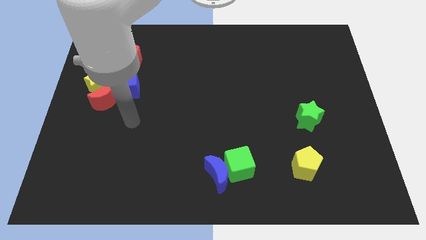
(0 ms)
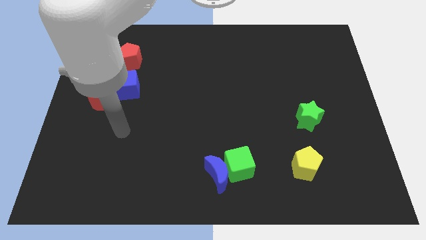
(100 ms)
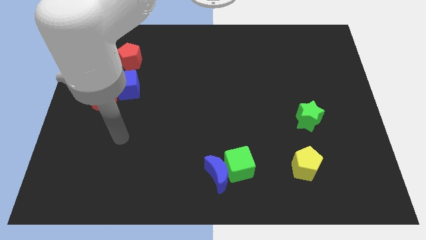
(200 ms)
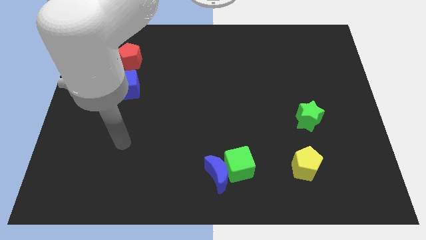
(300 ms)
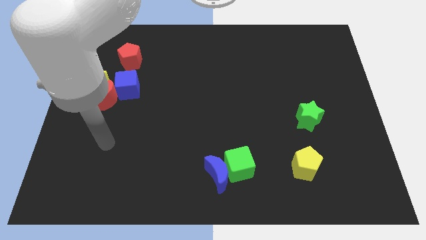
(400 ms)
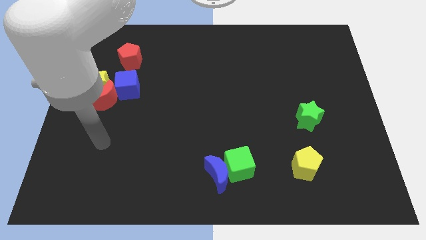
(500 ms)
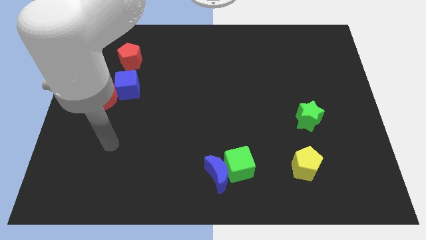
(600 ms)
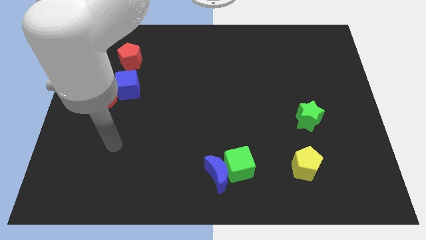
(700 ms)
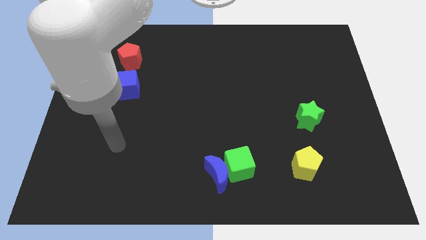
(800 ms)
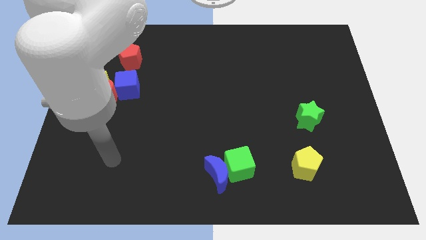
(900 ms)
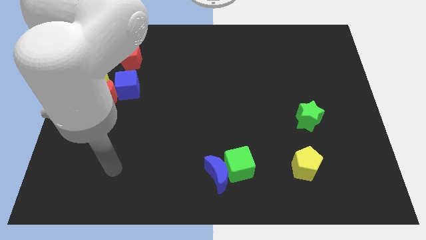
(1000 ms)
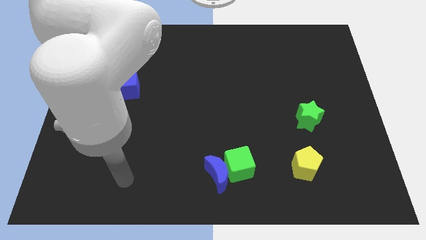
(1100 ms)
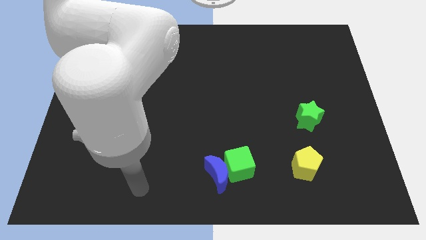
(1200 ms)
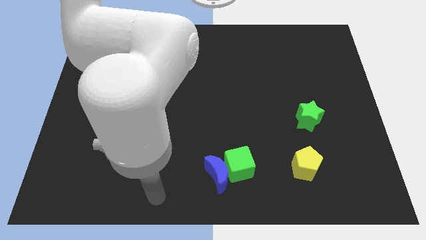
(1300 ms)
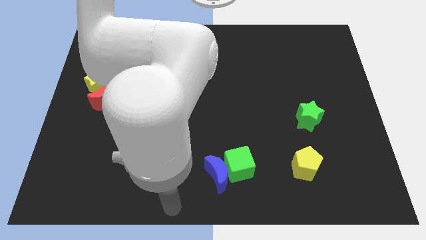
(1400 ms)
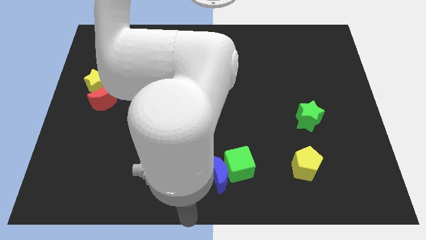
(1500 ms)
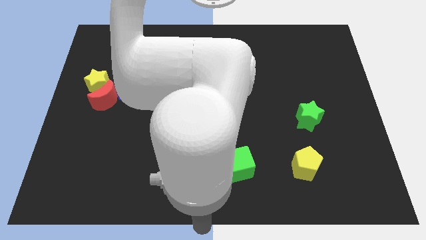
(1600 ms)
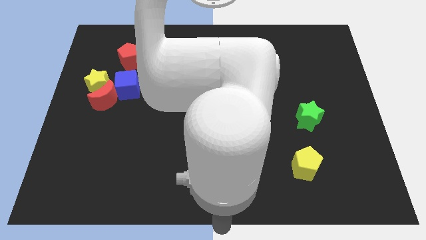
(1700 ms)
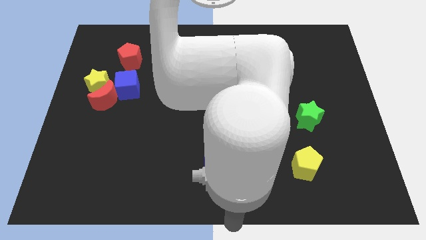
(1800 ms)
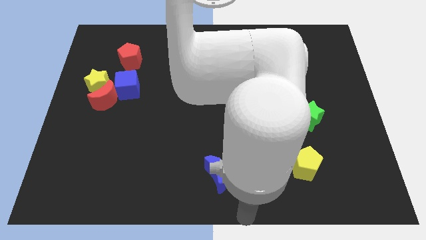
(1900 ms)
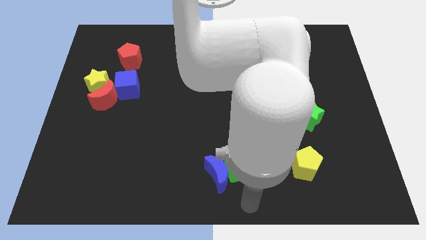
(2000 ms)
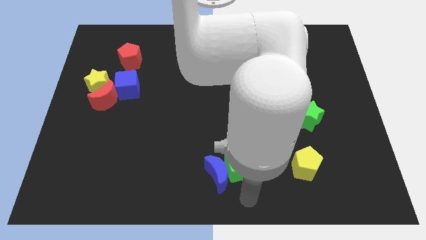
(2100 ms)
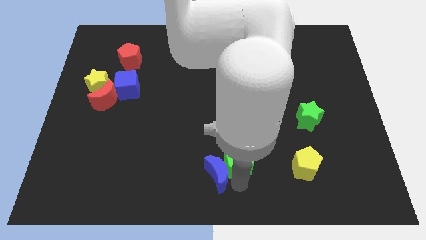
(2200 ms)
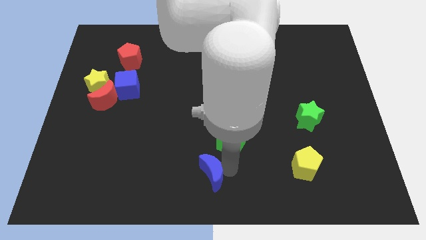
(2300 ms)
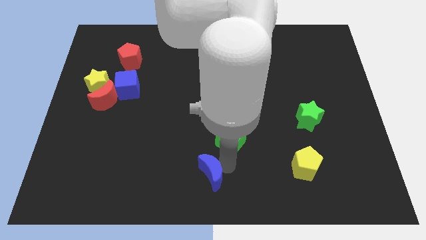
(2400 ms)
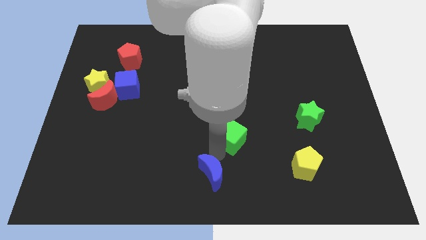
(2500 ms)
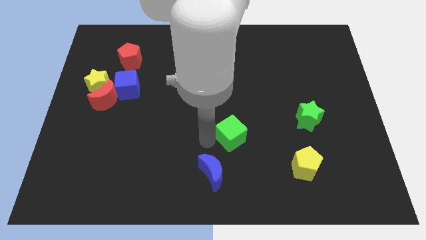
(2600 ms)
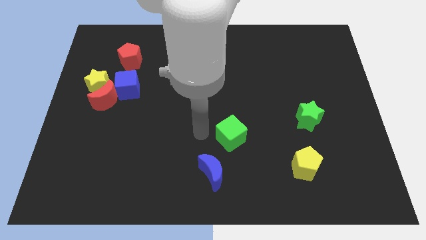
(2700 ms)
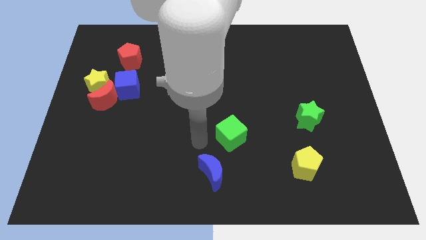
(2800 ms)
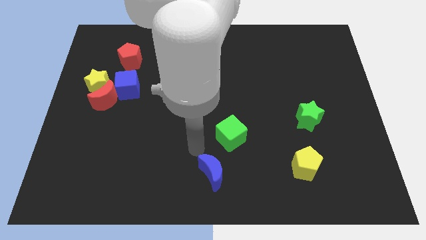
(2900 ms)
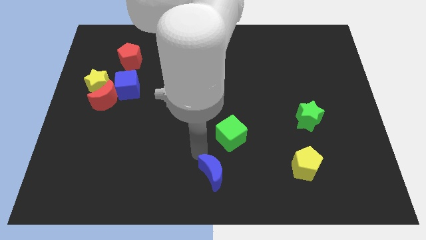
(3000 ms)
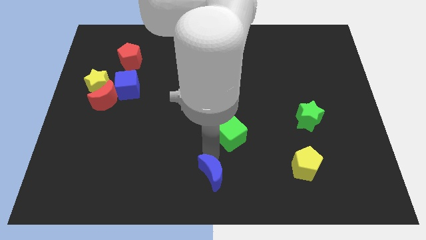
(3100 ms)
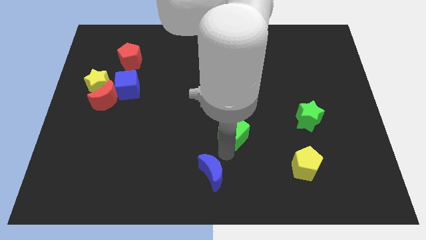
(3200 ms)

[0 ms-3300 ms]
go and separate the blue crescent and the green cube

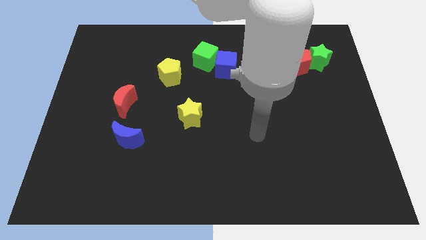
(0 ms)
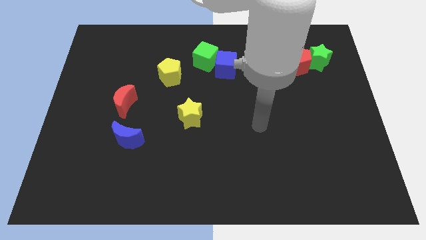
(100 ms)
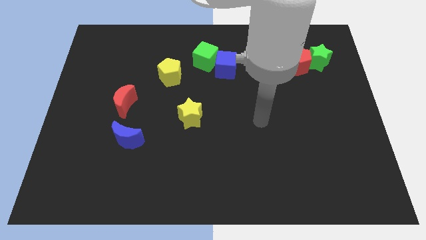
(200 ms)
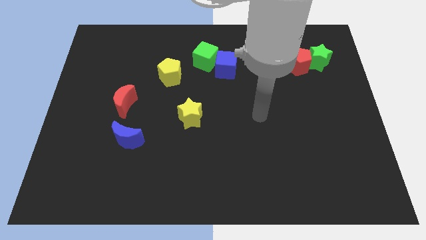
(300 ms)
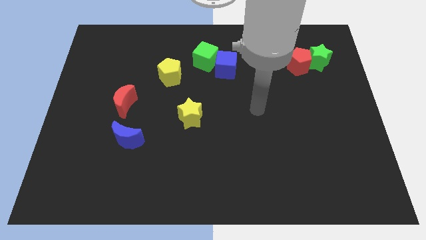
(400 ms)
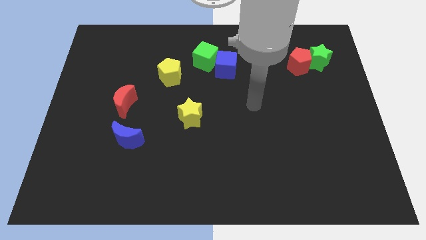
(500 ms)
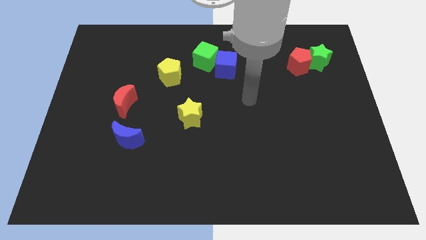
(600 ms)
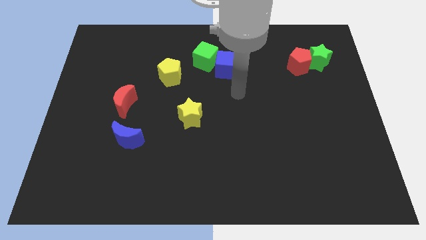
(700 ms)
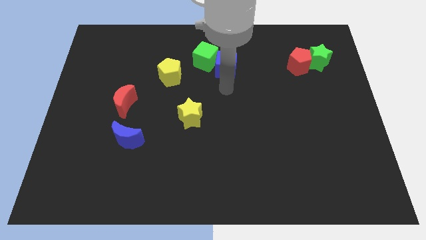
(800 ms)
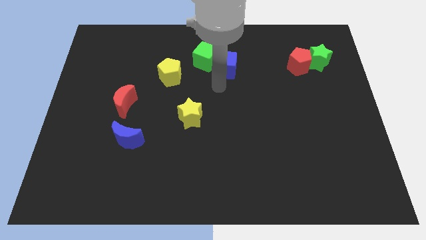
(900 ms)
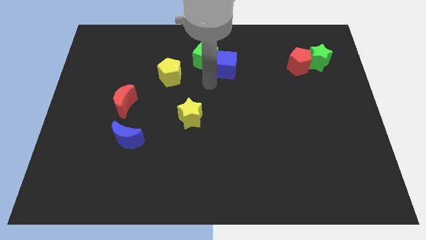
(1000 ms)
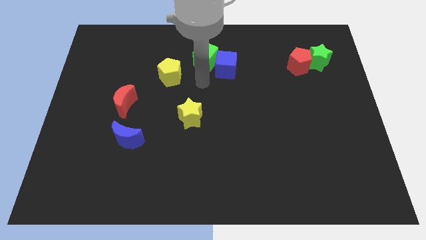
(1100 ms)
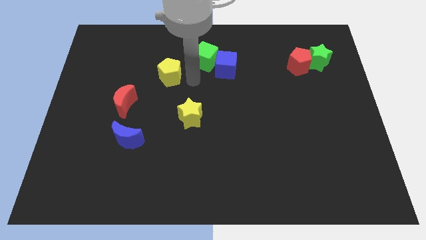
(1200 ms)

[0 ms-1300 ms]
move the green cube slightly to the top side

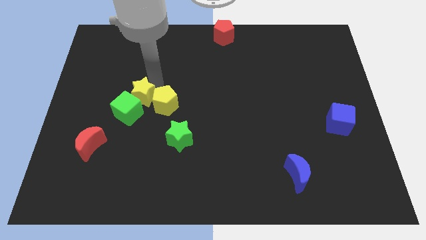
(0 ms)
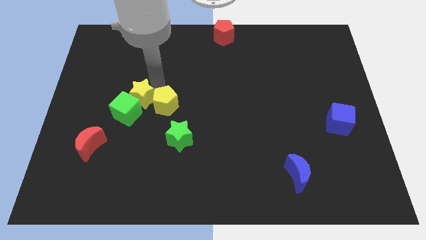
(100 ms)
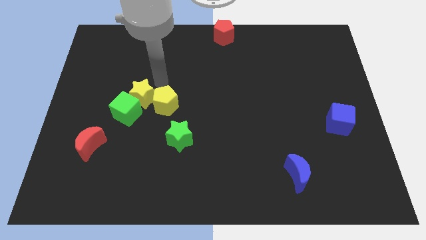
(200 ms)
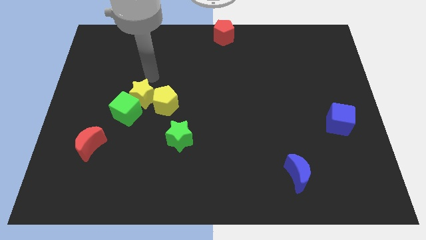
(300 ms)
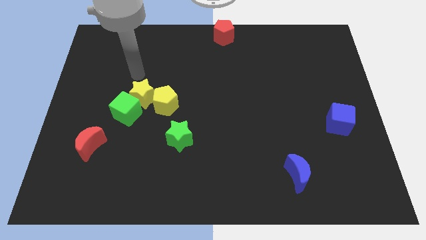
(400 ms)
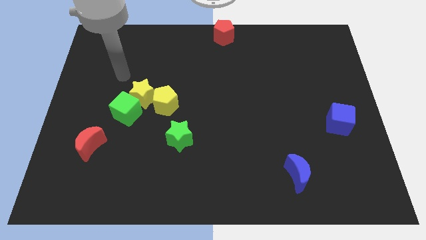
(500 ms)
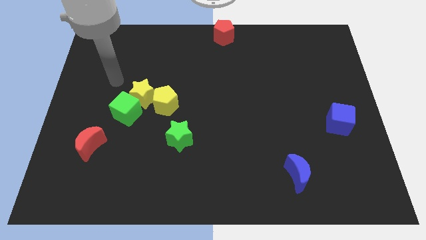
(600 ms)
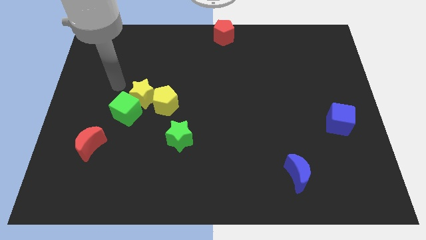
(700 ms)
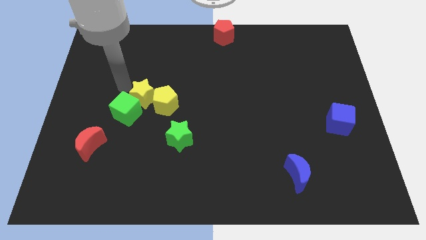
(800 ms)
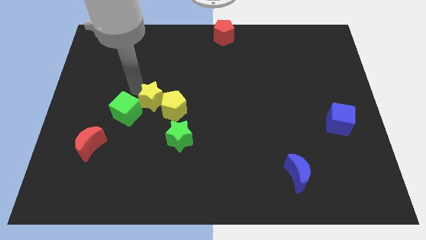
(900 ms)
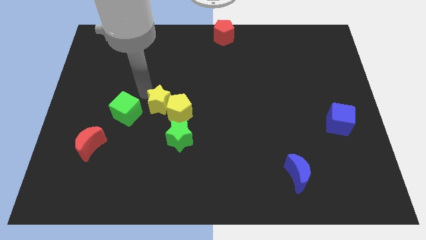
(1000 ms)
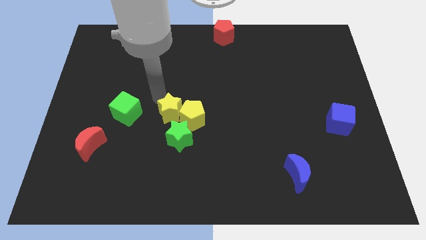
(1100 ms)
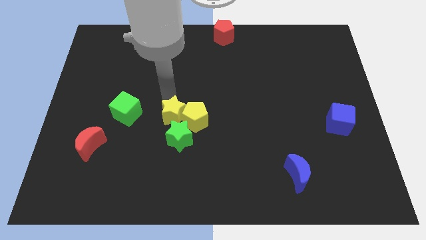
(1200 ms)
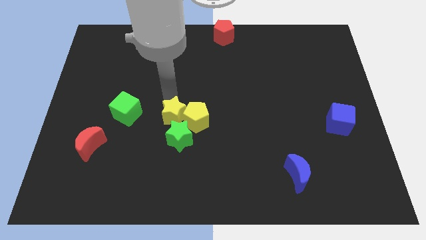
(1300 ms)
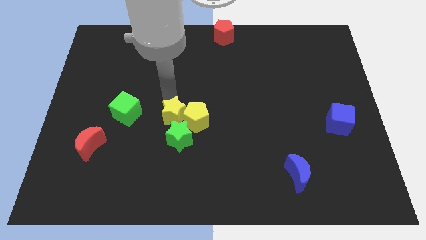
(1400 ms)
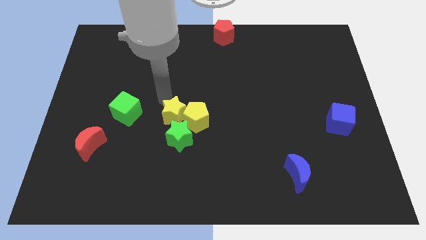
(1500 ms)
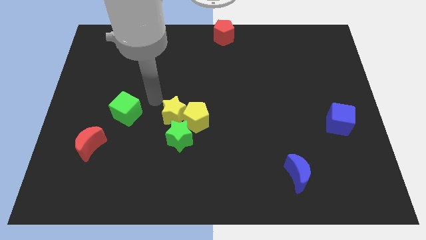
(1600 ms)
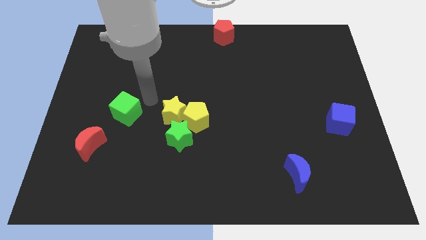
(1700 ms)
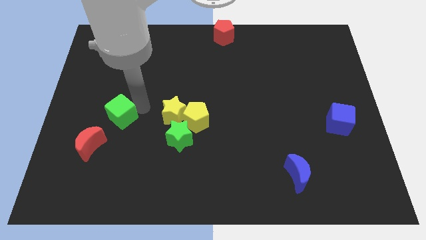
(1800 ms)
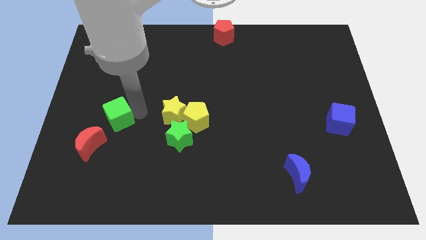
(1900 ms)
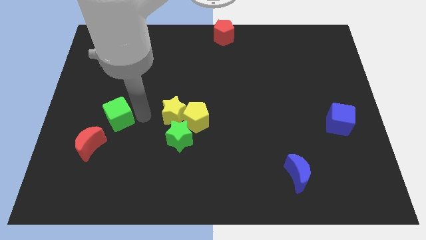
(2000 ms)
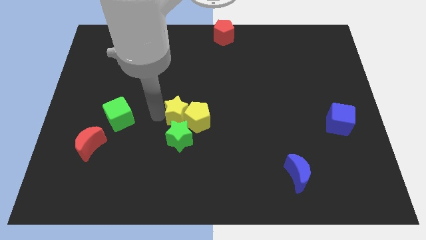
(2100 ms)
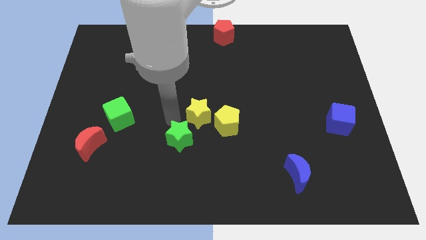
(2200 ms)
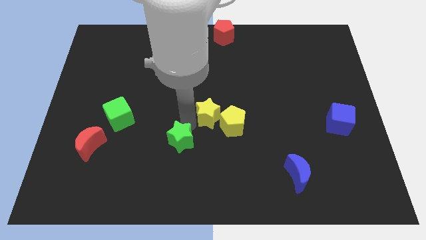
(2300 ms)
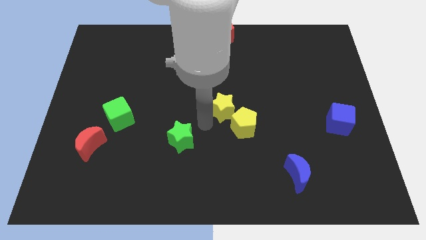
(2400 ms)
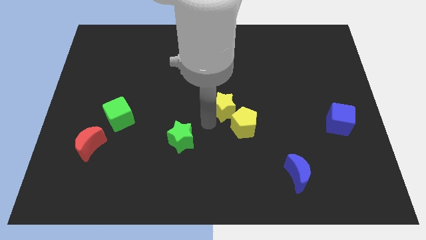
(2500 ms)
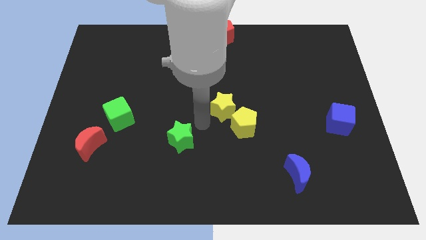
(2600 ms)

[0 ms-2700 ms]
place the yellow blocks at the center of the board

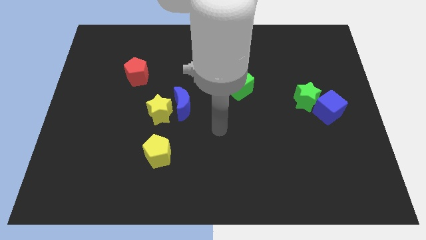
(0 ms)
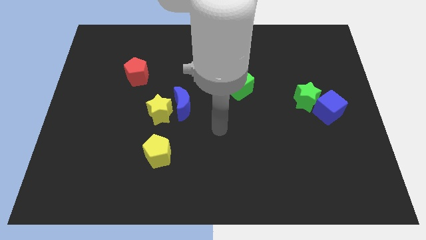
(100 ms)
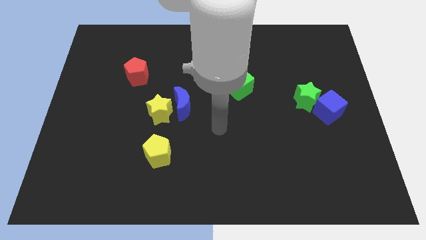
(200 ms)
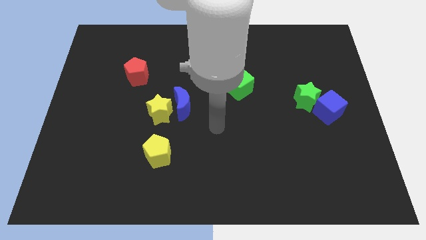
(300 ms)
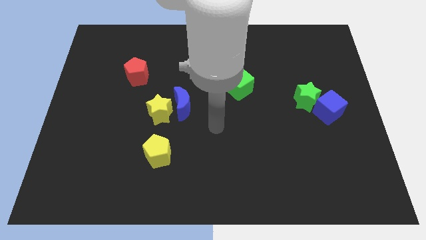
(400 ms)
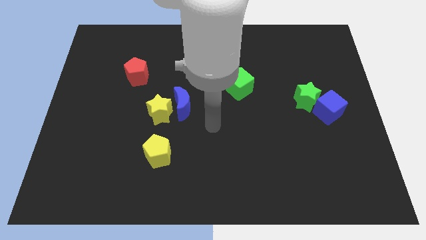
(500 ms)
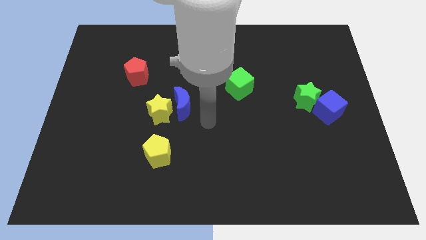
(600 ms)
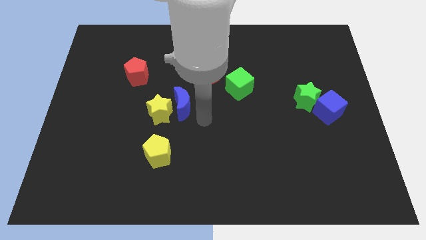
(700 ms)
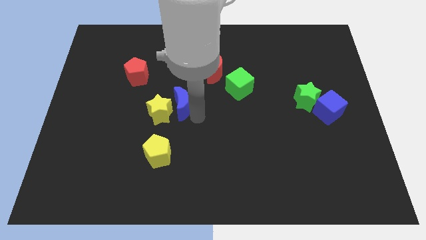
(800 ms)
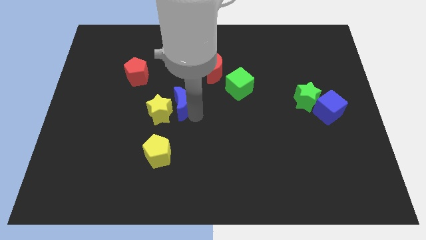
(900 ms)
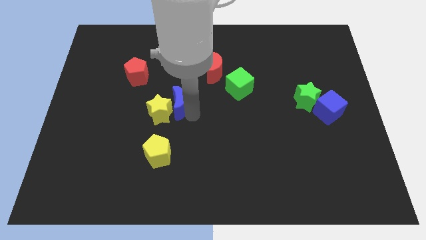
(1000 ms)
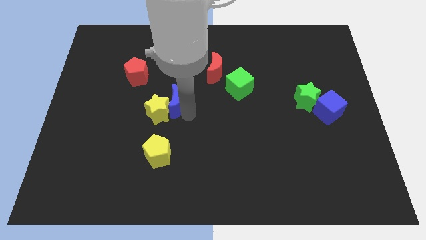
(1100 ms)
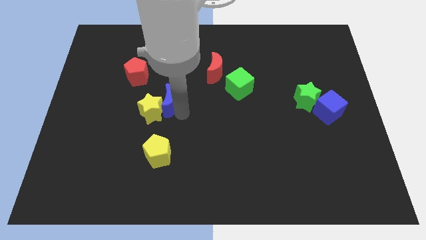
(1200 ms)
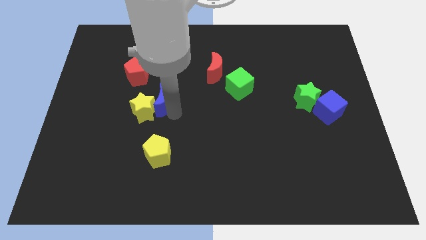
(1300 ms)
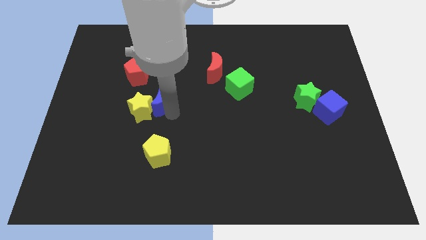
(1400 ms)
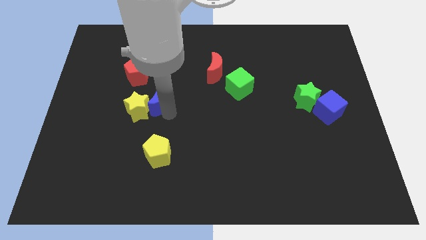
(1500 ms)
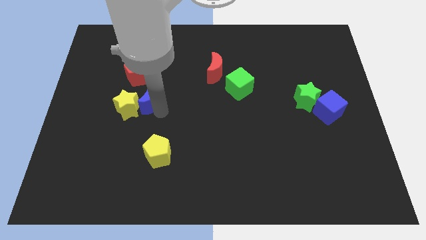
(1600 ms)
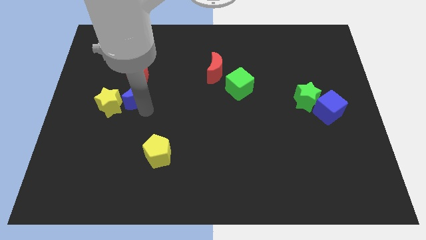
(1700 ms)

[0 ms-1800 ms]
push the yellow star and the blue moon slightly to the left
